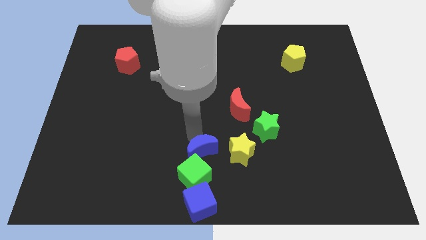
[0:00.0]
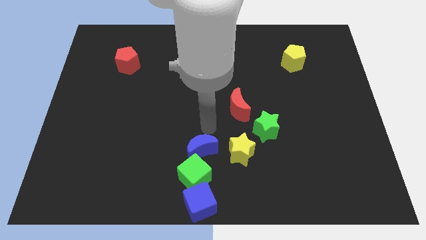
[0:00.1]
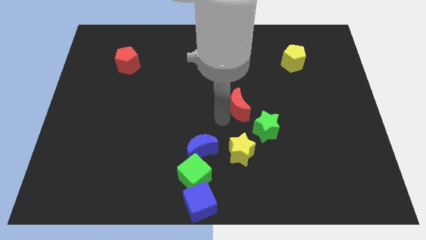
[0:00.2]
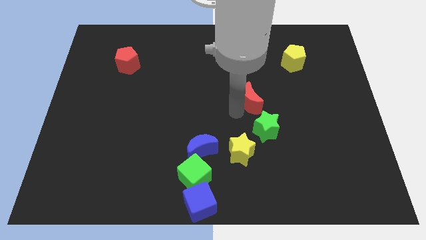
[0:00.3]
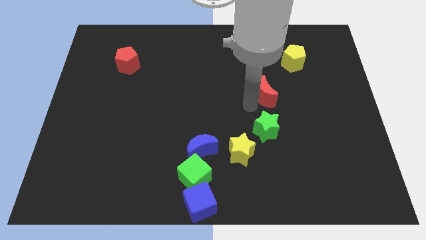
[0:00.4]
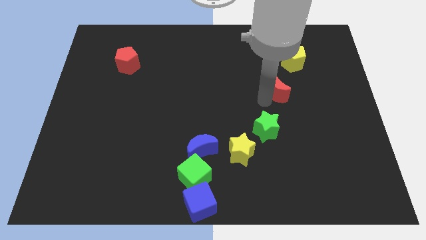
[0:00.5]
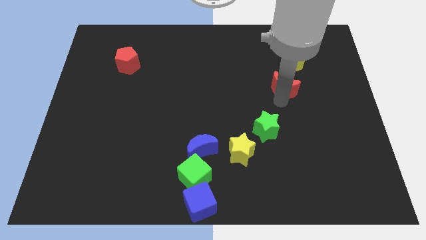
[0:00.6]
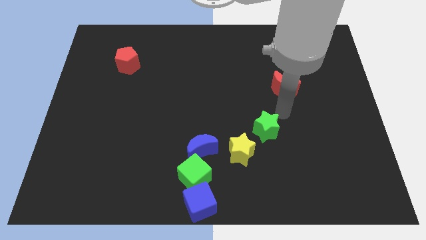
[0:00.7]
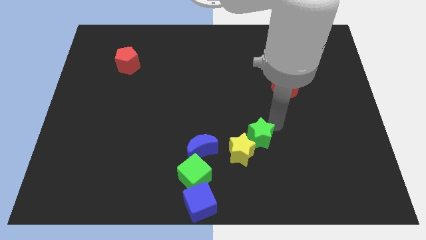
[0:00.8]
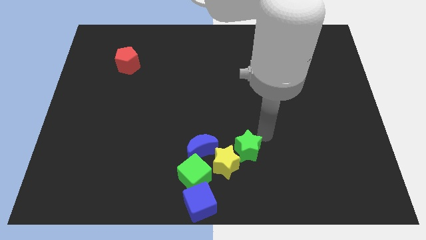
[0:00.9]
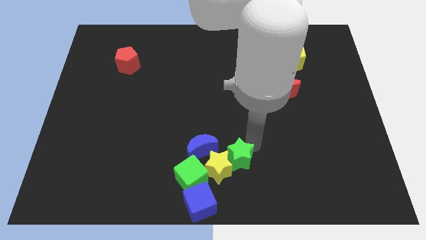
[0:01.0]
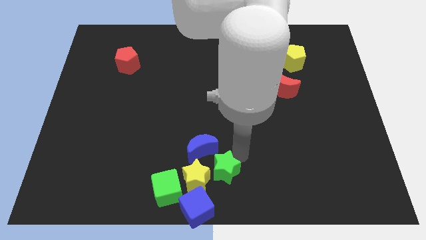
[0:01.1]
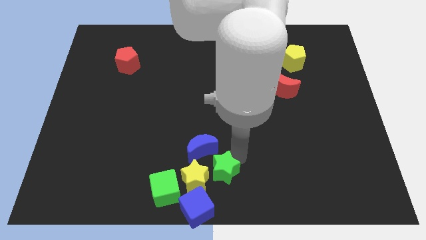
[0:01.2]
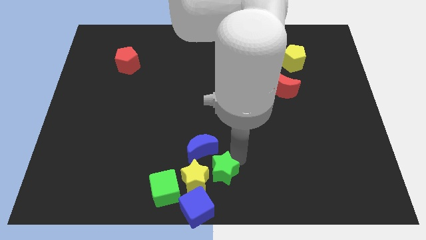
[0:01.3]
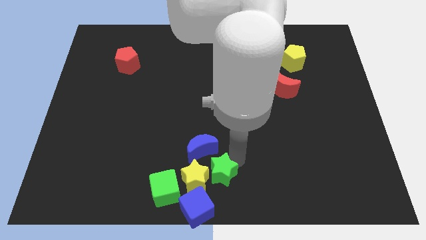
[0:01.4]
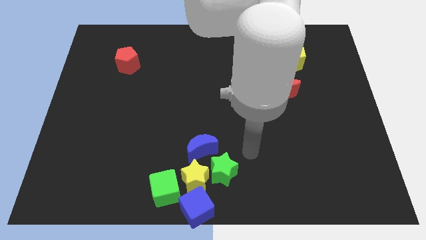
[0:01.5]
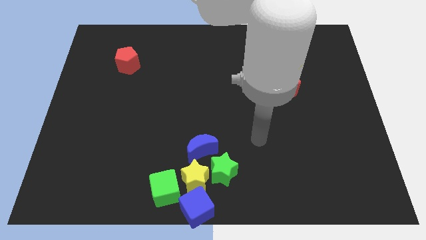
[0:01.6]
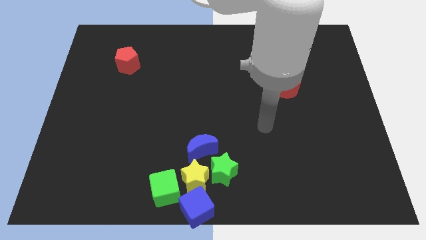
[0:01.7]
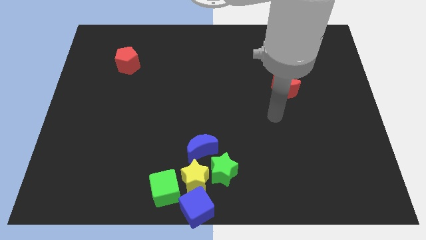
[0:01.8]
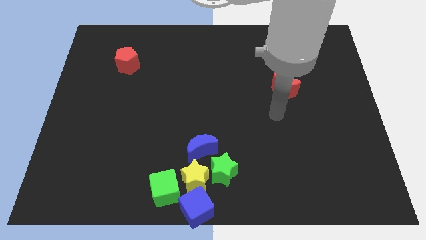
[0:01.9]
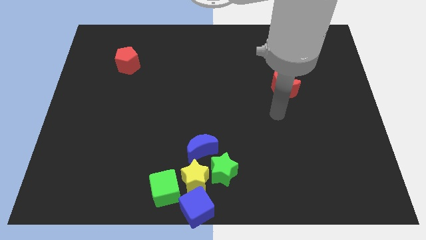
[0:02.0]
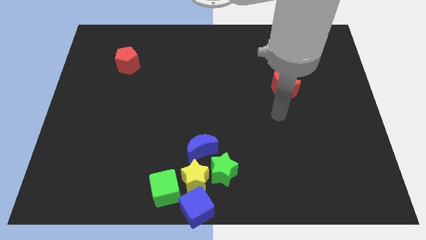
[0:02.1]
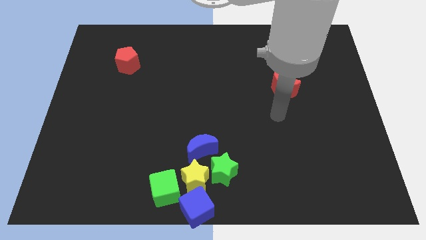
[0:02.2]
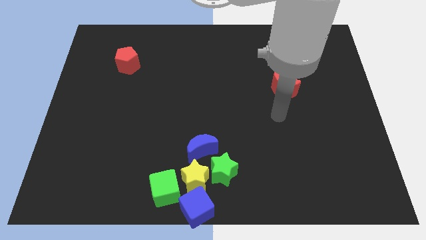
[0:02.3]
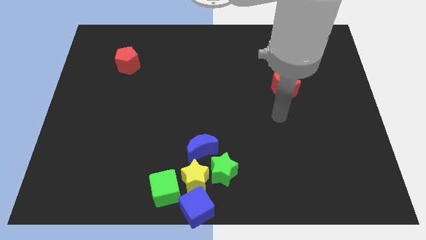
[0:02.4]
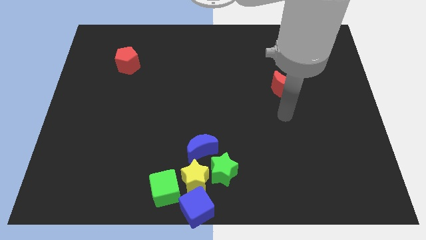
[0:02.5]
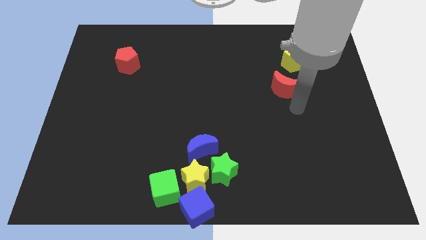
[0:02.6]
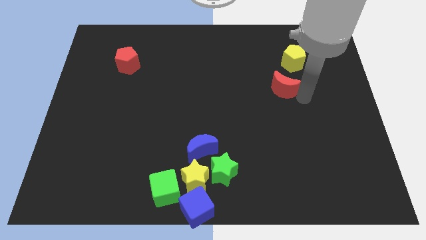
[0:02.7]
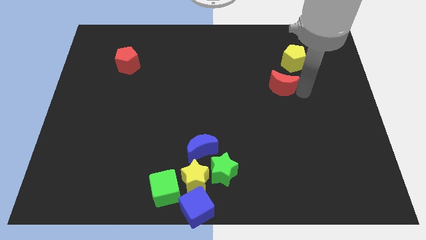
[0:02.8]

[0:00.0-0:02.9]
push the green star into the yellow star

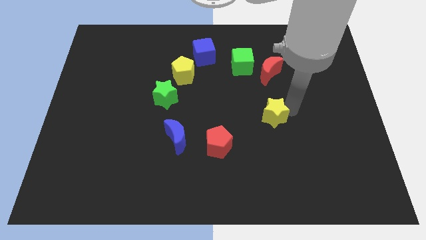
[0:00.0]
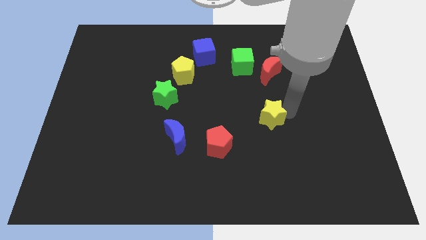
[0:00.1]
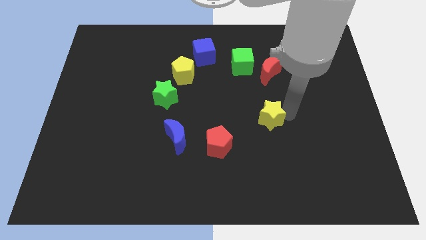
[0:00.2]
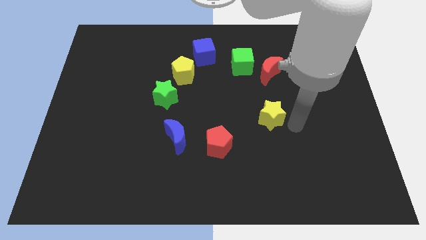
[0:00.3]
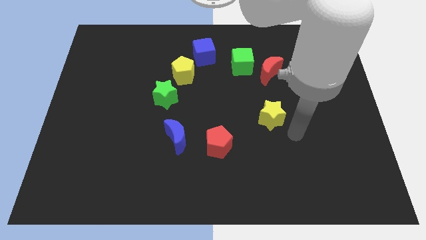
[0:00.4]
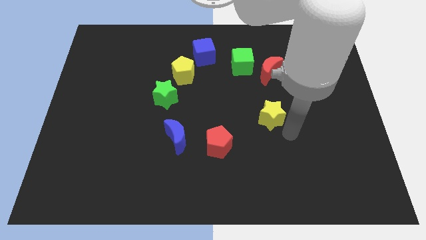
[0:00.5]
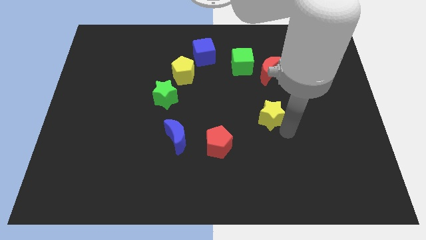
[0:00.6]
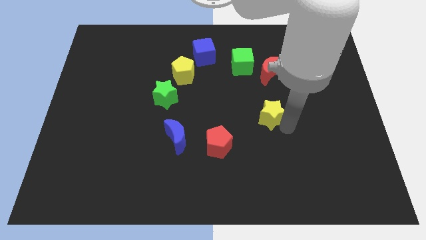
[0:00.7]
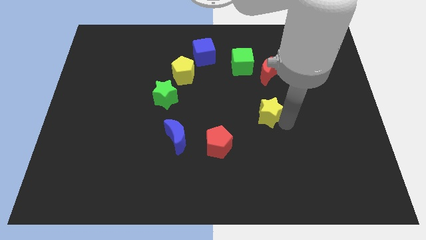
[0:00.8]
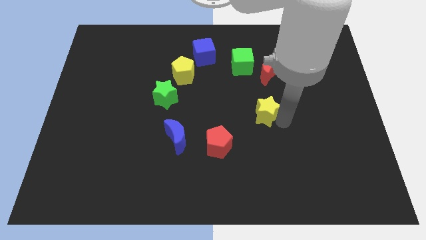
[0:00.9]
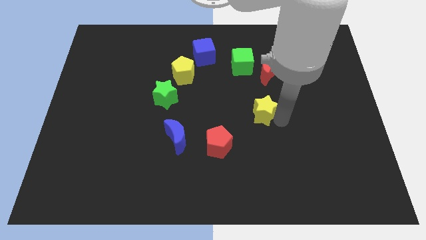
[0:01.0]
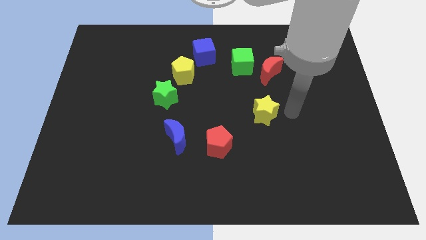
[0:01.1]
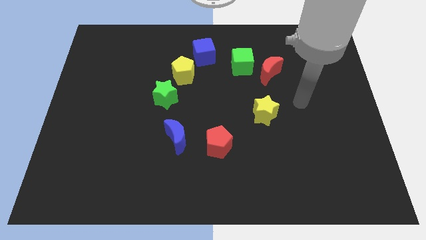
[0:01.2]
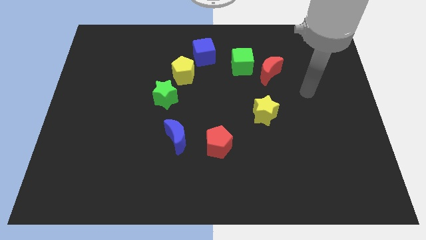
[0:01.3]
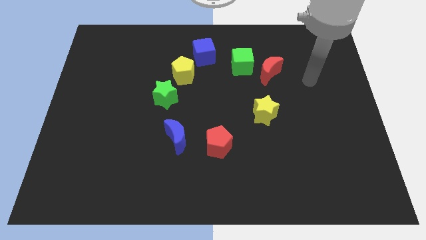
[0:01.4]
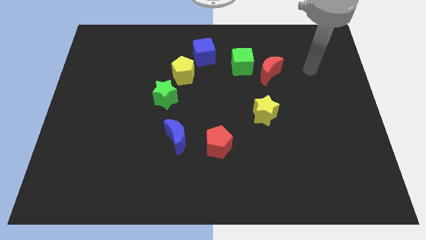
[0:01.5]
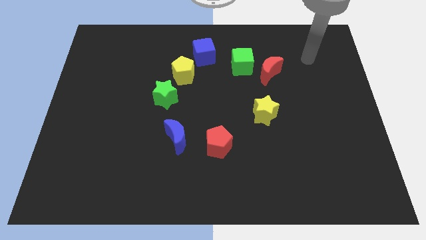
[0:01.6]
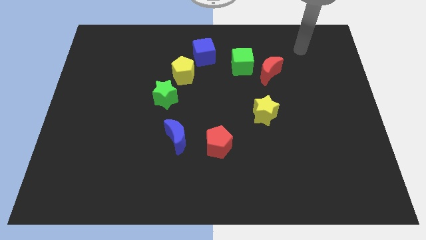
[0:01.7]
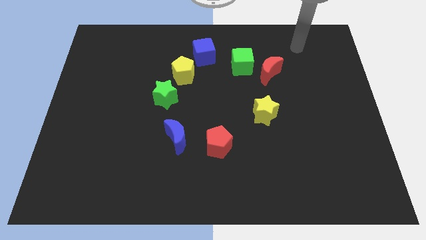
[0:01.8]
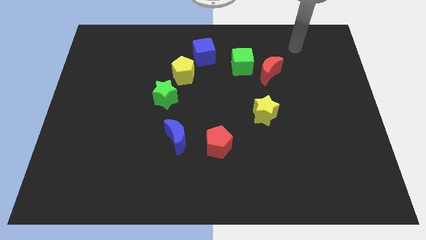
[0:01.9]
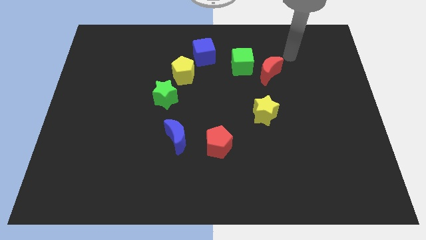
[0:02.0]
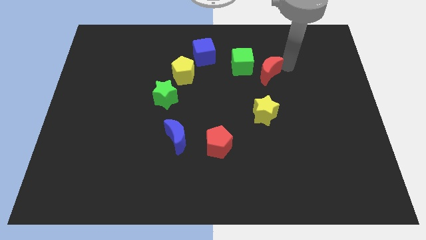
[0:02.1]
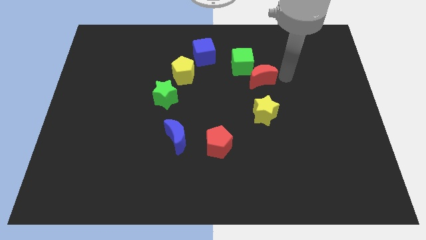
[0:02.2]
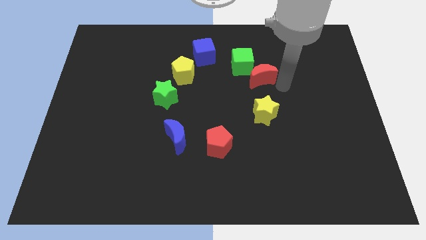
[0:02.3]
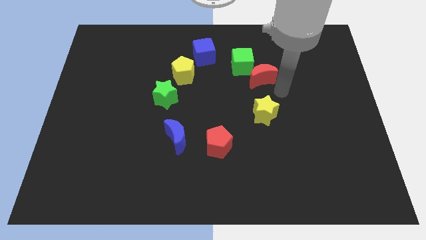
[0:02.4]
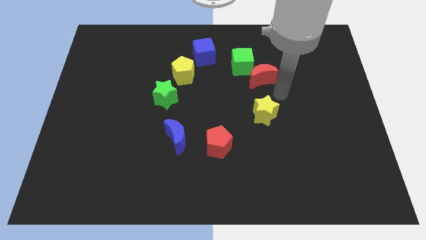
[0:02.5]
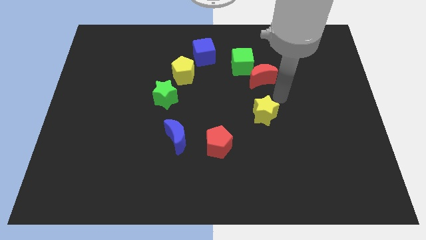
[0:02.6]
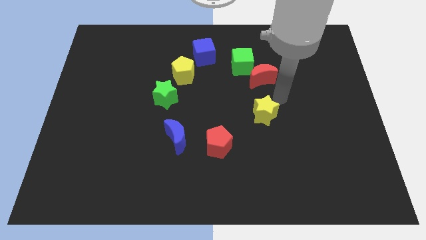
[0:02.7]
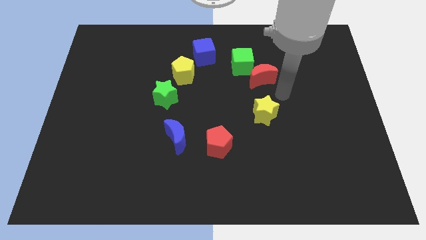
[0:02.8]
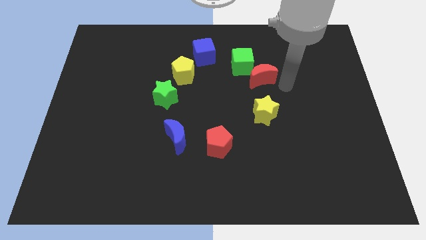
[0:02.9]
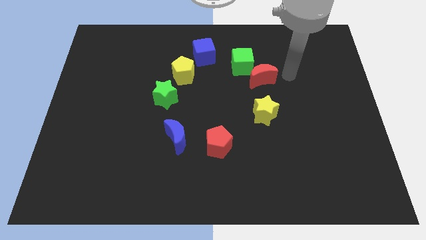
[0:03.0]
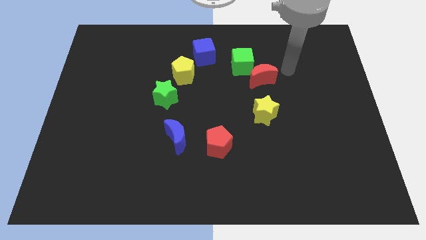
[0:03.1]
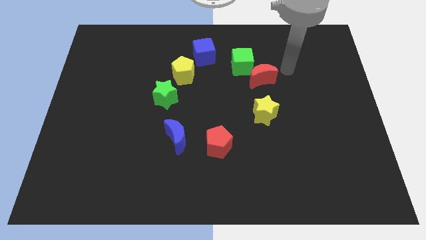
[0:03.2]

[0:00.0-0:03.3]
slightly touch right to the red moon

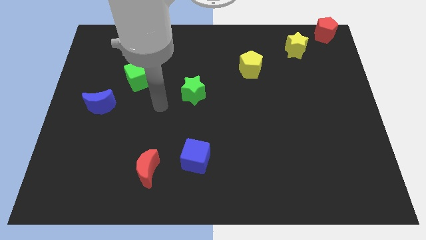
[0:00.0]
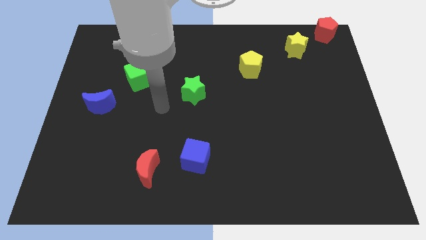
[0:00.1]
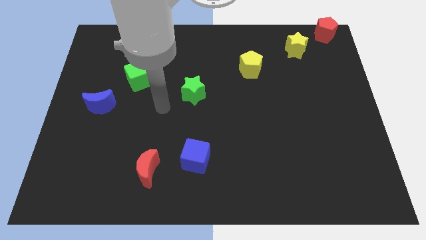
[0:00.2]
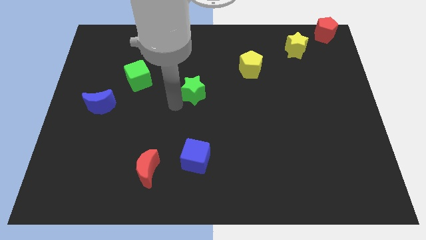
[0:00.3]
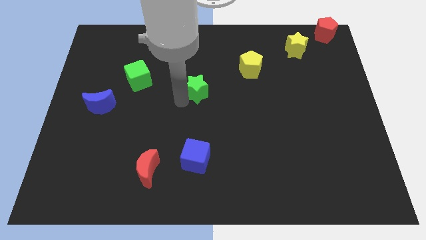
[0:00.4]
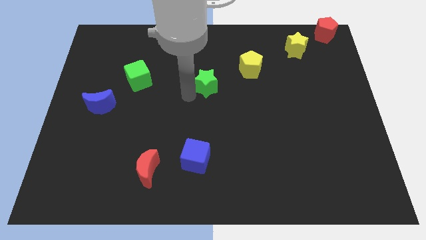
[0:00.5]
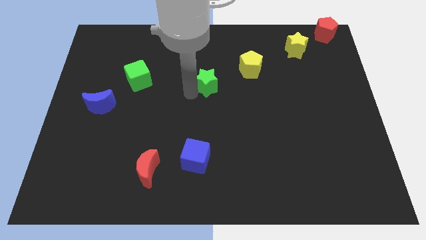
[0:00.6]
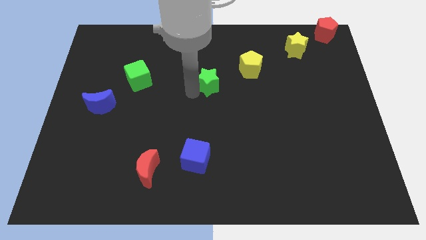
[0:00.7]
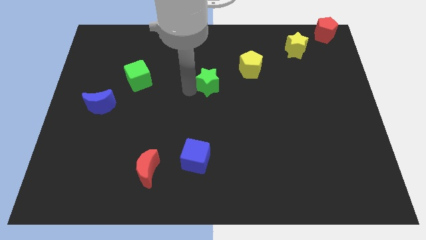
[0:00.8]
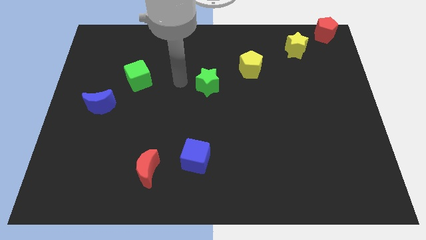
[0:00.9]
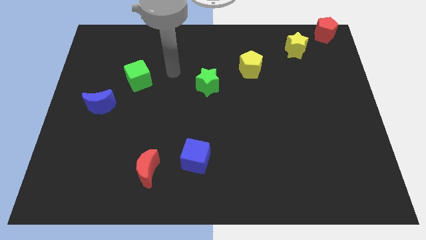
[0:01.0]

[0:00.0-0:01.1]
move the green star towards yellow pentagon

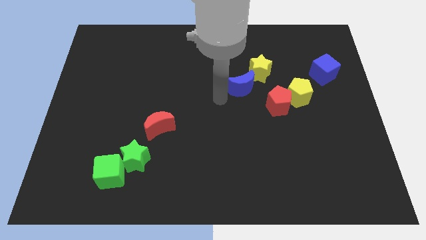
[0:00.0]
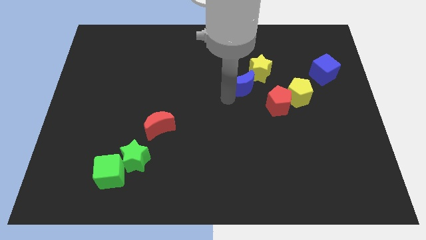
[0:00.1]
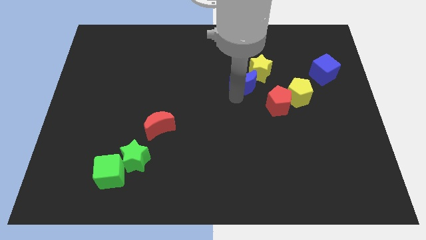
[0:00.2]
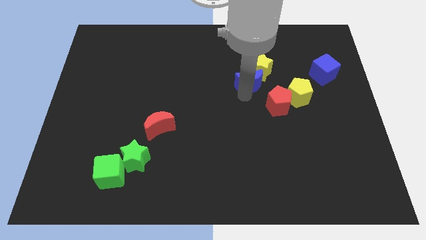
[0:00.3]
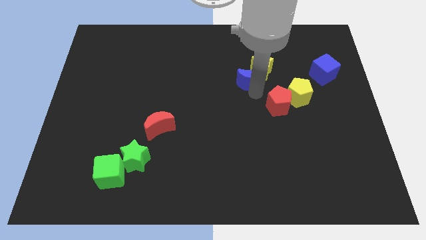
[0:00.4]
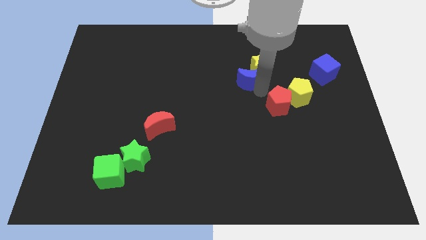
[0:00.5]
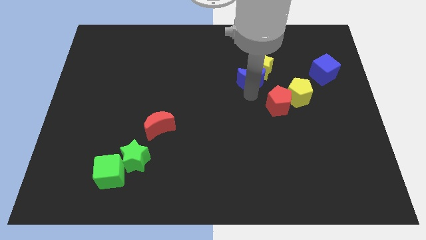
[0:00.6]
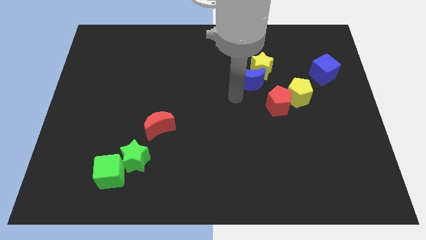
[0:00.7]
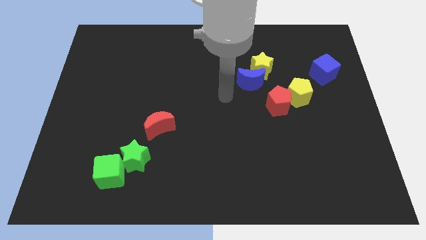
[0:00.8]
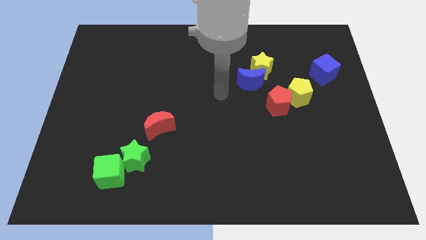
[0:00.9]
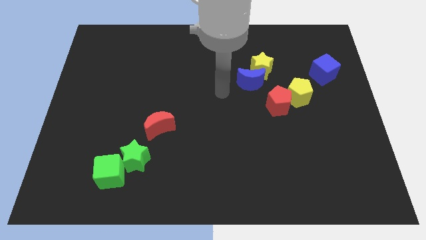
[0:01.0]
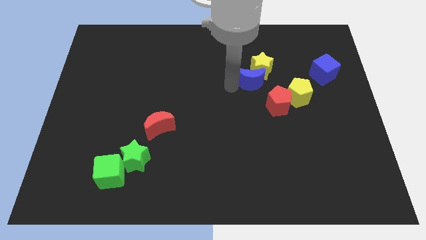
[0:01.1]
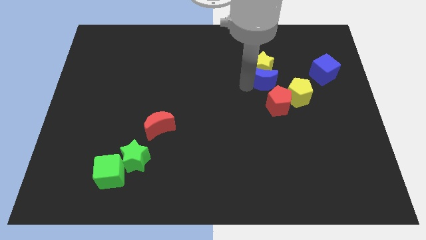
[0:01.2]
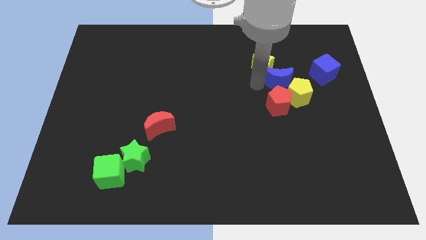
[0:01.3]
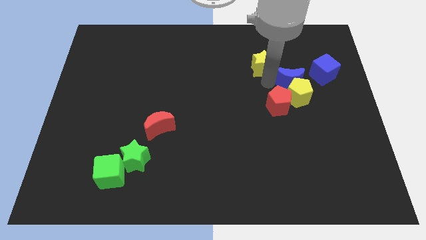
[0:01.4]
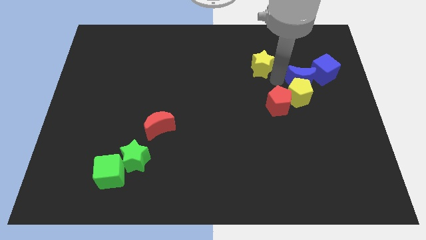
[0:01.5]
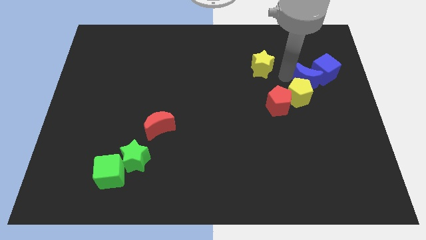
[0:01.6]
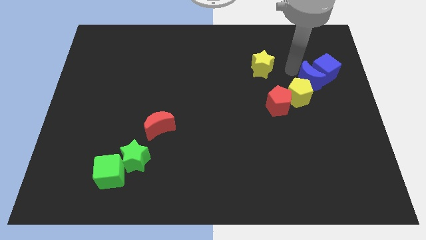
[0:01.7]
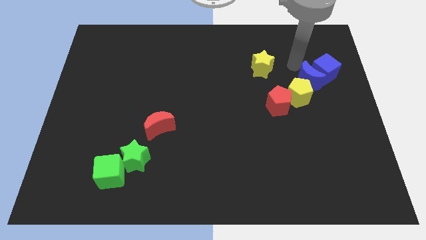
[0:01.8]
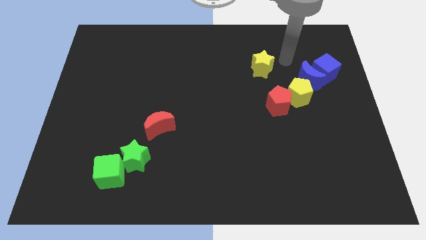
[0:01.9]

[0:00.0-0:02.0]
push the blue moon into blue cube
